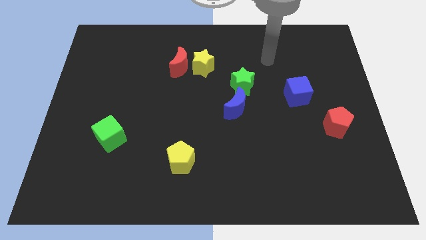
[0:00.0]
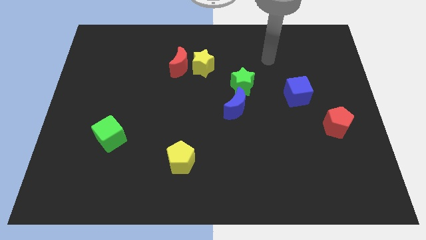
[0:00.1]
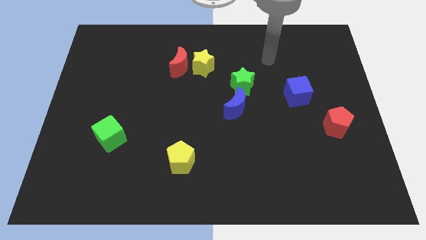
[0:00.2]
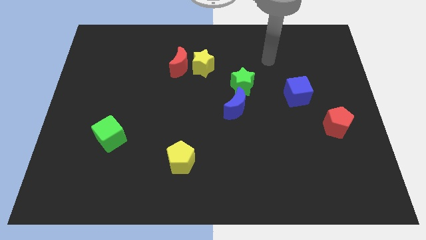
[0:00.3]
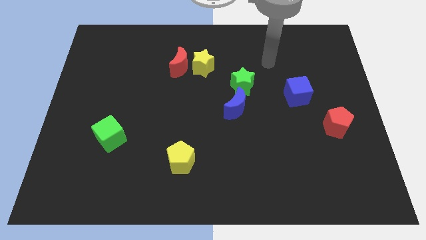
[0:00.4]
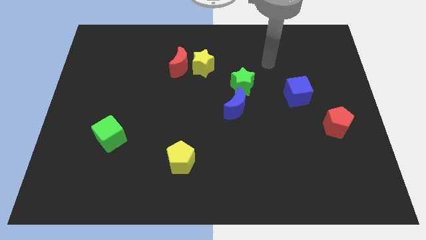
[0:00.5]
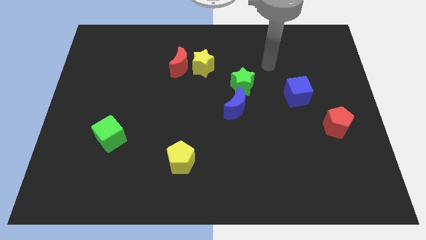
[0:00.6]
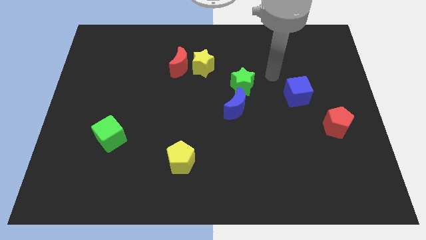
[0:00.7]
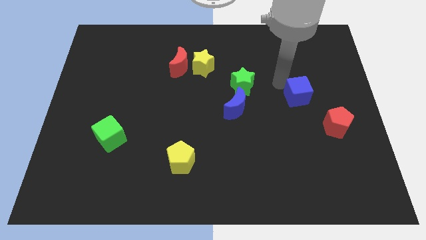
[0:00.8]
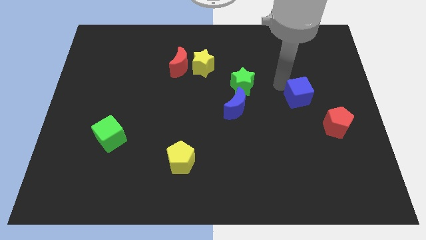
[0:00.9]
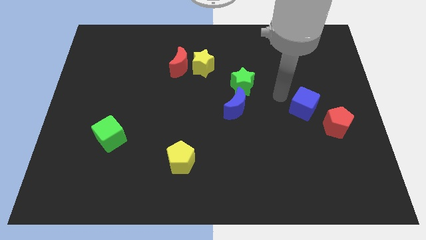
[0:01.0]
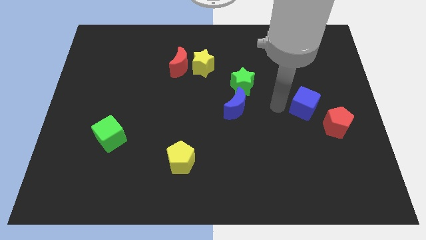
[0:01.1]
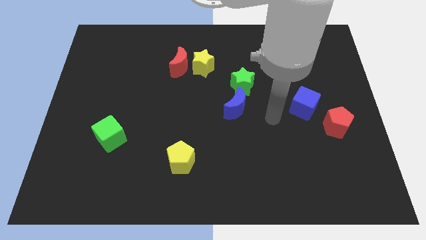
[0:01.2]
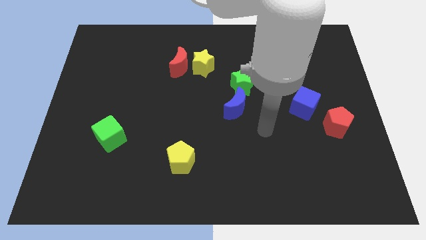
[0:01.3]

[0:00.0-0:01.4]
slightly push the blue cube

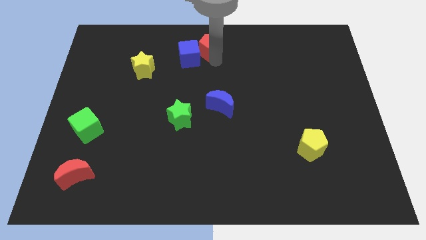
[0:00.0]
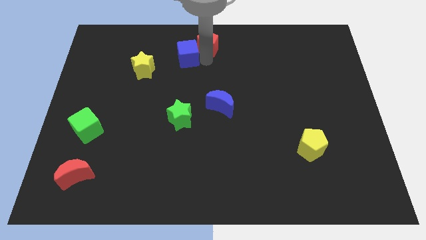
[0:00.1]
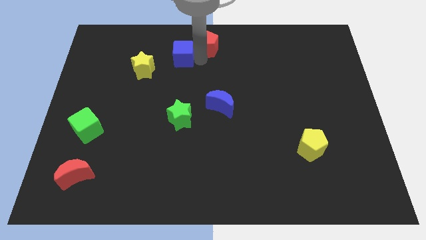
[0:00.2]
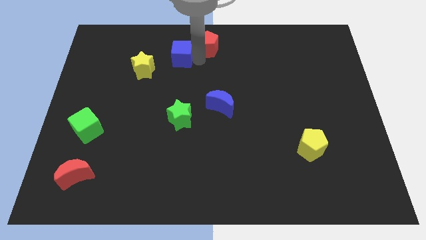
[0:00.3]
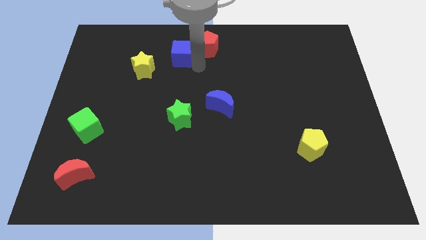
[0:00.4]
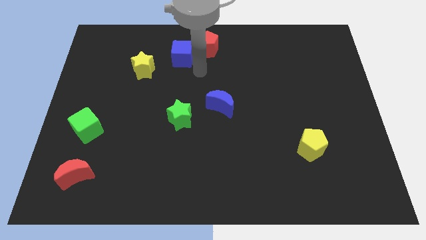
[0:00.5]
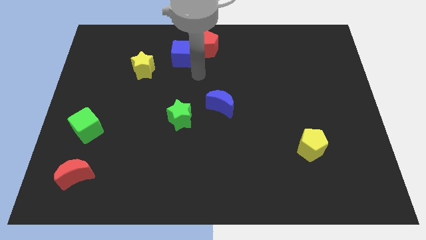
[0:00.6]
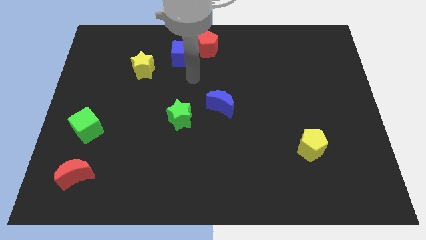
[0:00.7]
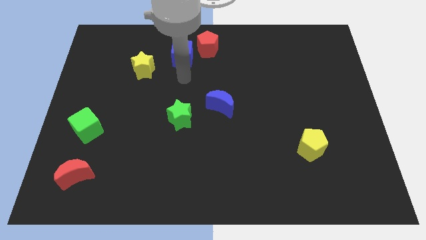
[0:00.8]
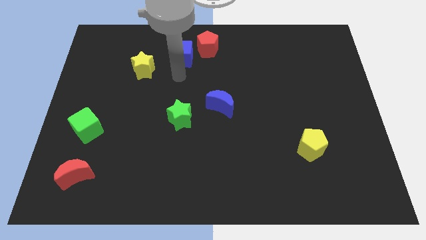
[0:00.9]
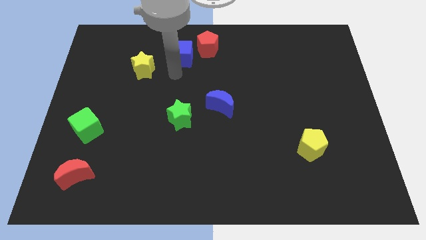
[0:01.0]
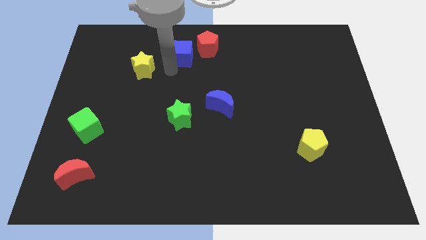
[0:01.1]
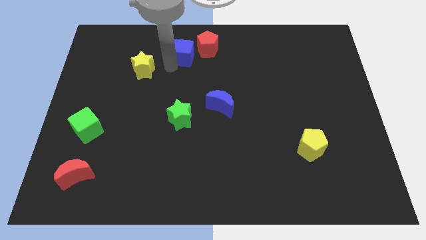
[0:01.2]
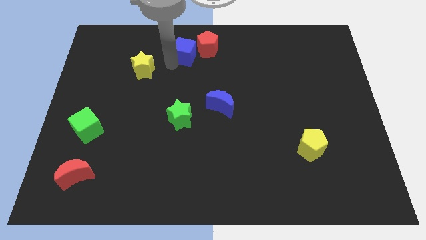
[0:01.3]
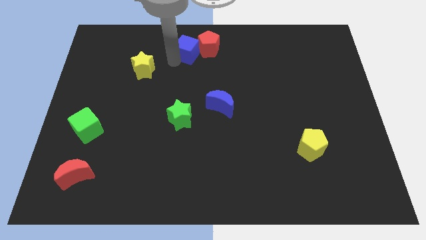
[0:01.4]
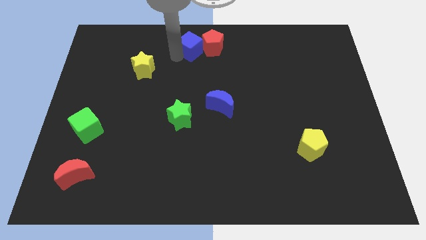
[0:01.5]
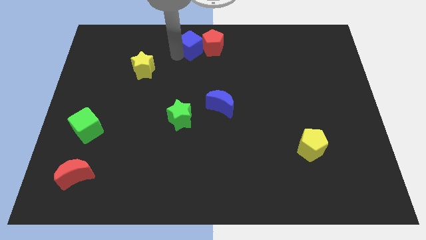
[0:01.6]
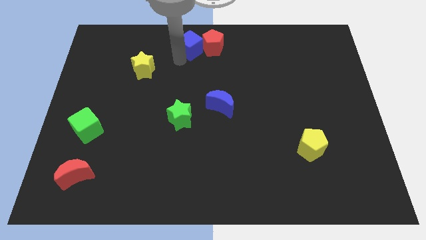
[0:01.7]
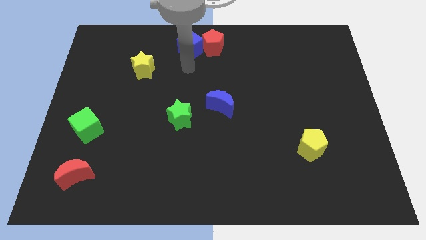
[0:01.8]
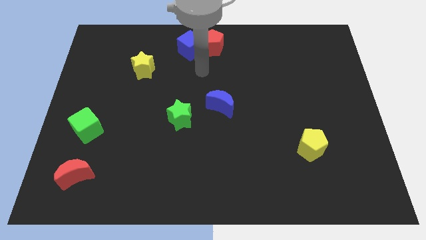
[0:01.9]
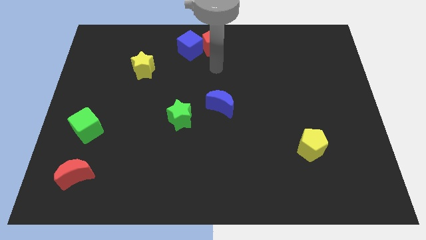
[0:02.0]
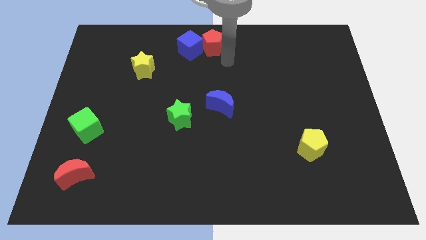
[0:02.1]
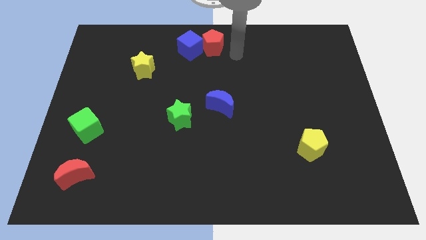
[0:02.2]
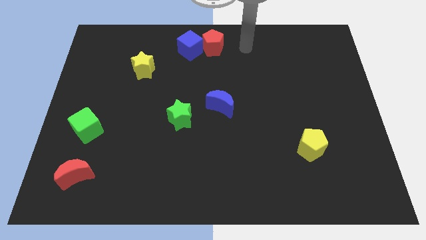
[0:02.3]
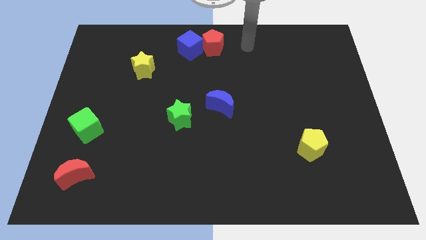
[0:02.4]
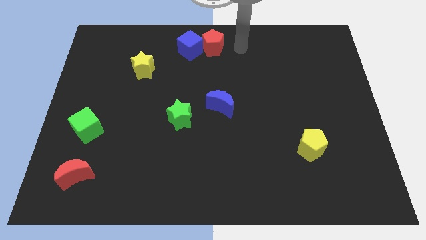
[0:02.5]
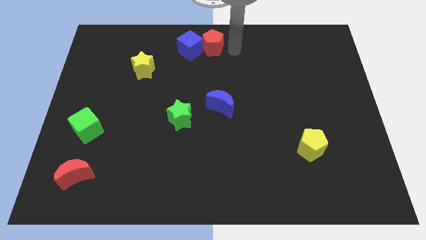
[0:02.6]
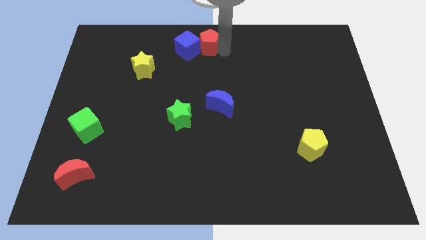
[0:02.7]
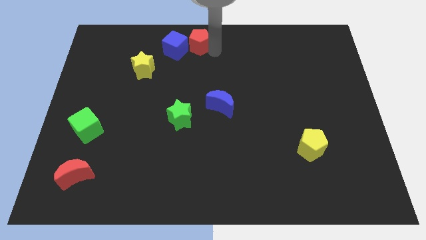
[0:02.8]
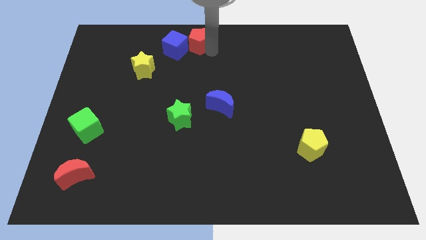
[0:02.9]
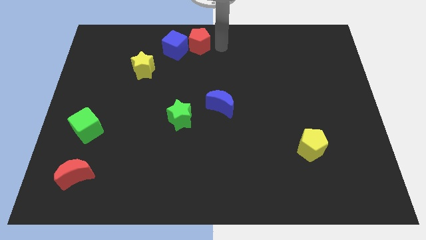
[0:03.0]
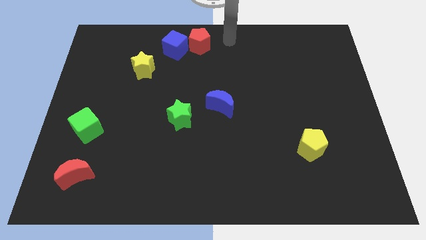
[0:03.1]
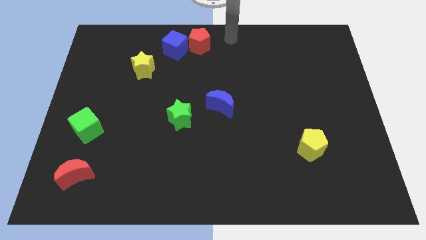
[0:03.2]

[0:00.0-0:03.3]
place blue cube above green star

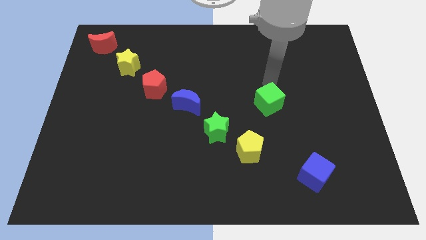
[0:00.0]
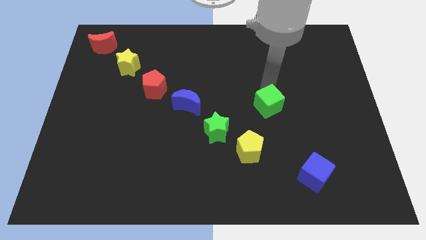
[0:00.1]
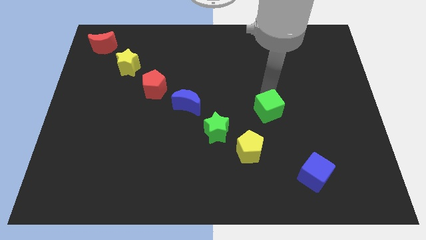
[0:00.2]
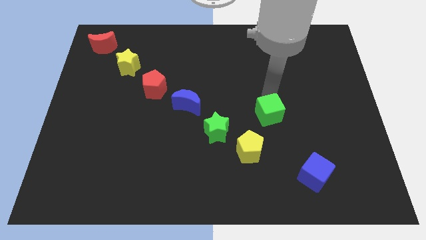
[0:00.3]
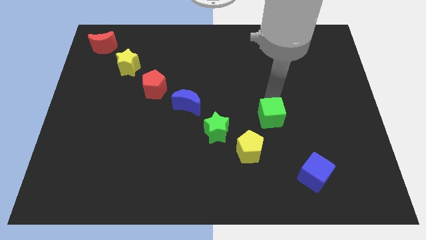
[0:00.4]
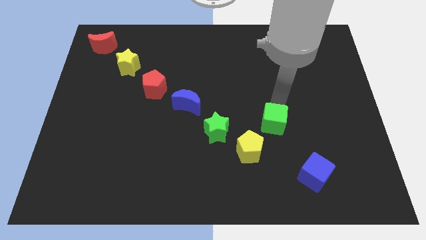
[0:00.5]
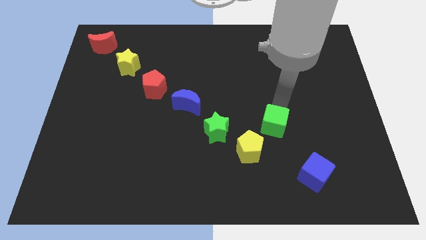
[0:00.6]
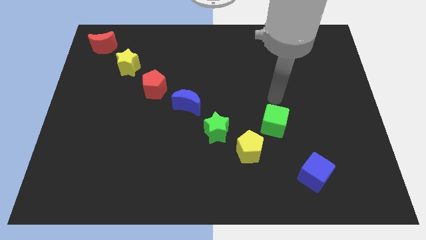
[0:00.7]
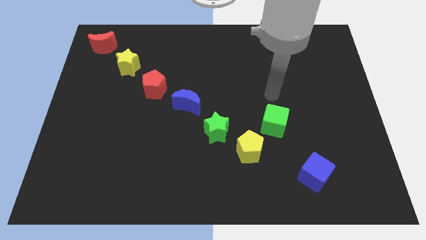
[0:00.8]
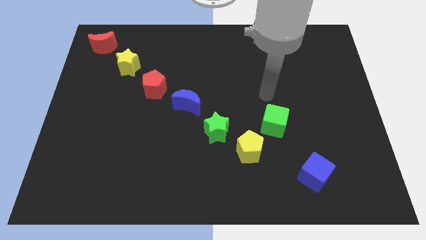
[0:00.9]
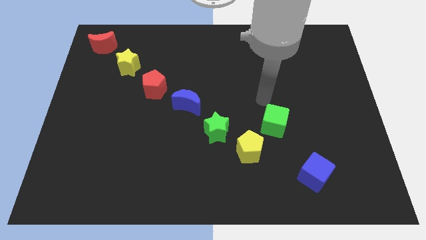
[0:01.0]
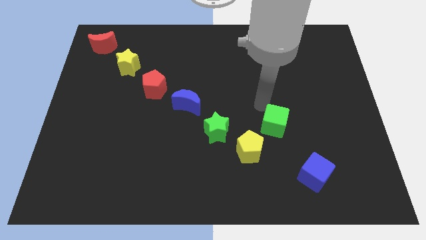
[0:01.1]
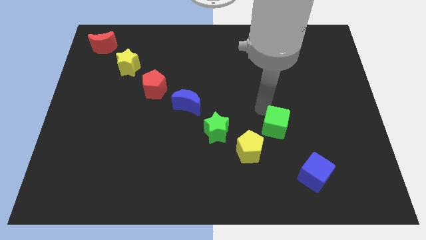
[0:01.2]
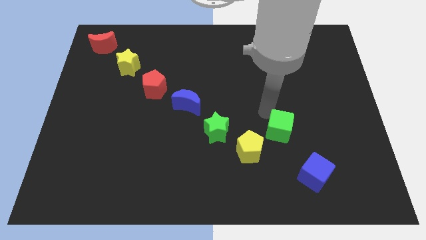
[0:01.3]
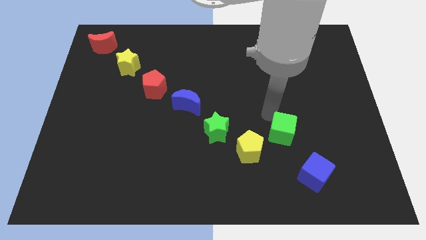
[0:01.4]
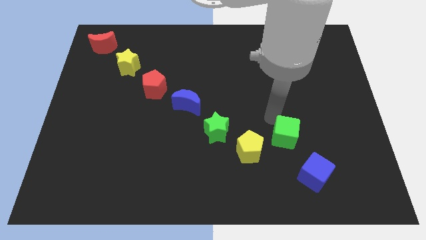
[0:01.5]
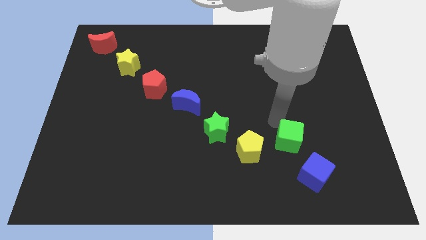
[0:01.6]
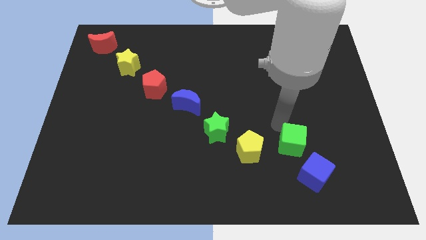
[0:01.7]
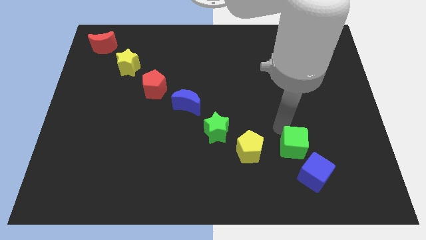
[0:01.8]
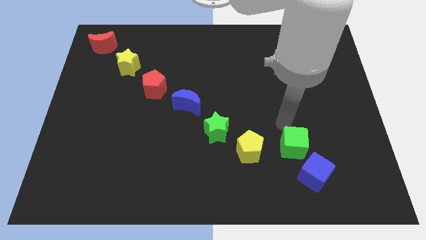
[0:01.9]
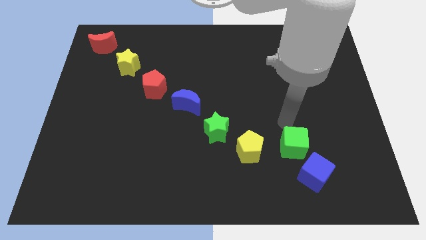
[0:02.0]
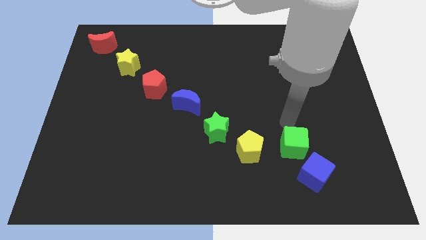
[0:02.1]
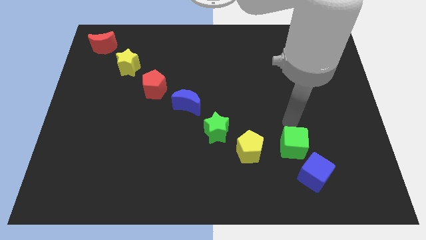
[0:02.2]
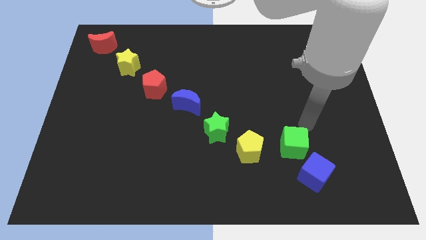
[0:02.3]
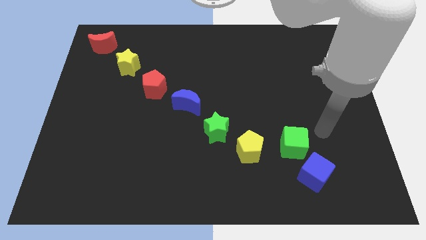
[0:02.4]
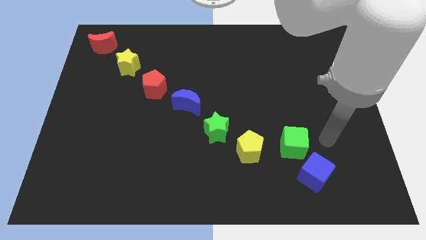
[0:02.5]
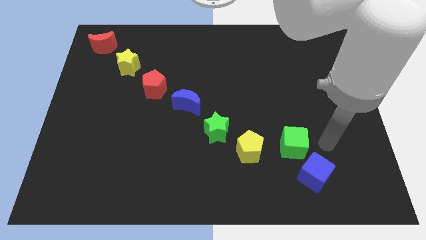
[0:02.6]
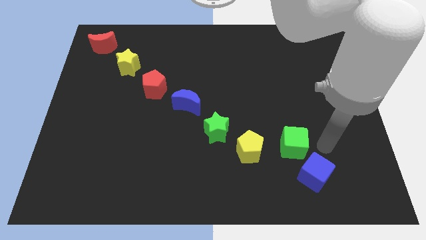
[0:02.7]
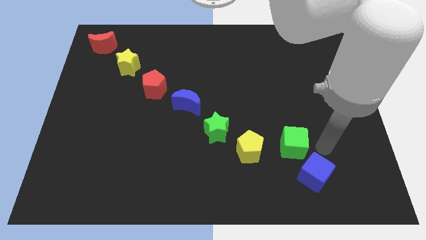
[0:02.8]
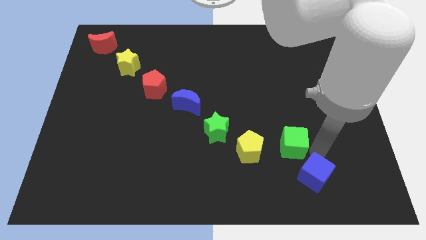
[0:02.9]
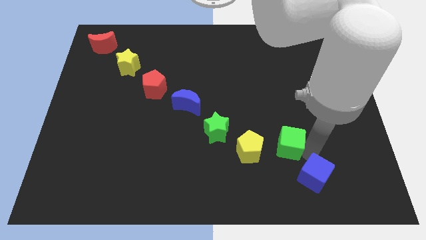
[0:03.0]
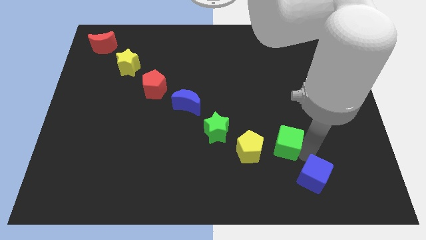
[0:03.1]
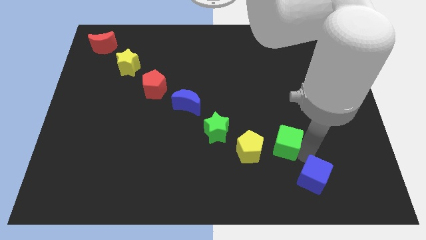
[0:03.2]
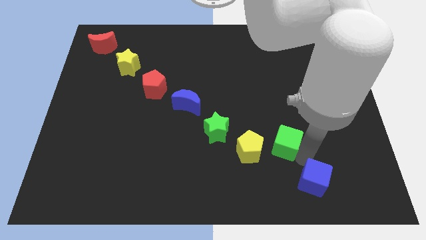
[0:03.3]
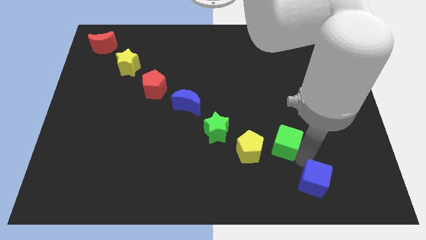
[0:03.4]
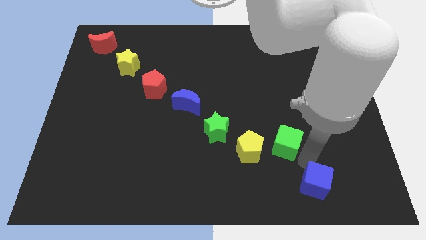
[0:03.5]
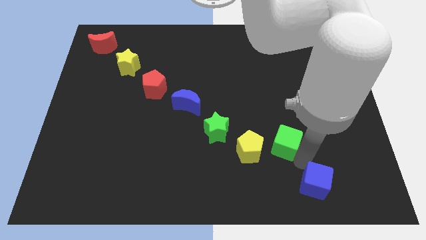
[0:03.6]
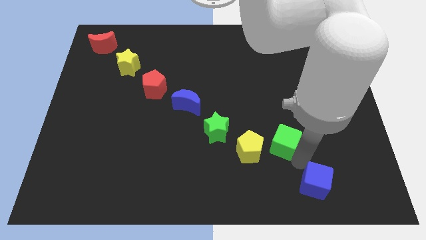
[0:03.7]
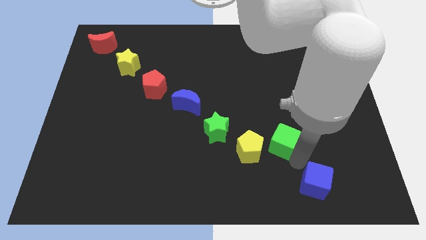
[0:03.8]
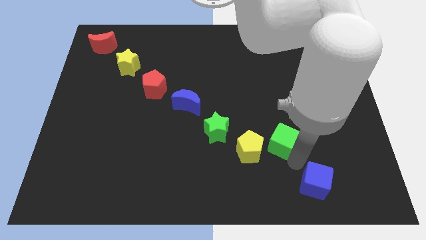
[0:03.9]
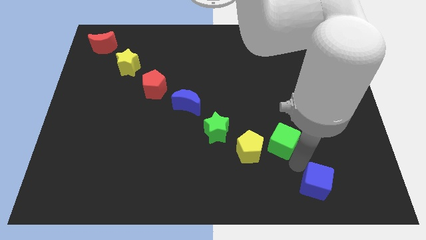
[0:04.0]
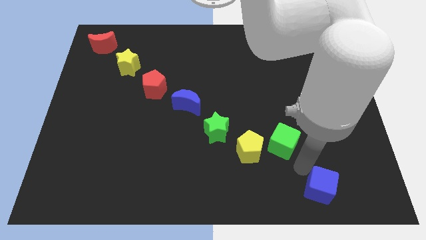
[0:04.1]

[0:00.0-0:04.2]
move the green cube towards the yellow pentagon
